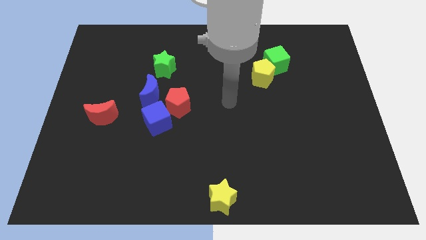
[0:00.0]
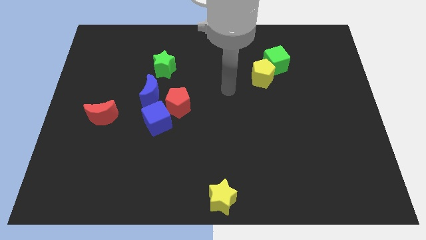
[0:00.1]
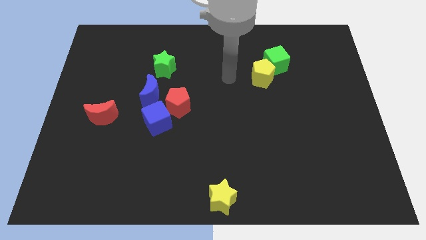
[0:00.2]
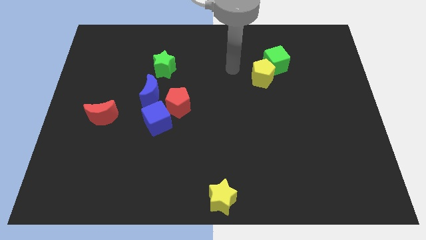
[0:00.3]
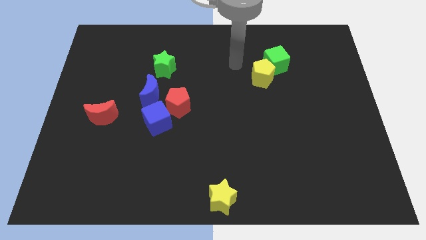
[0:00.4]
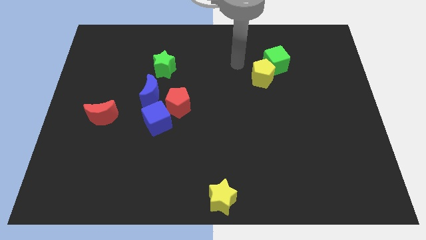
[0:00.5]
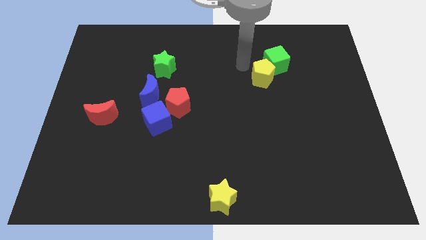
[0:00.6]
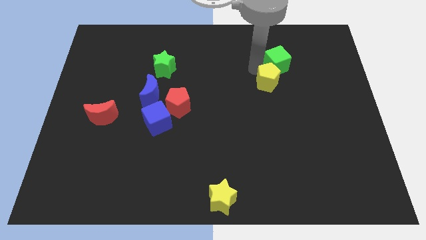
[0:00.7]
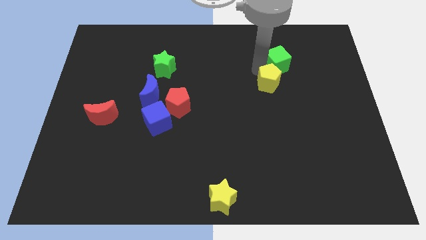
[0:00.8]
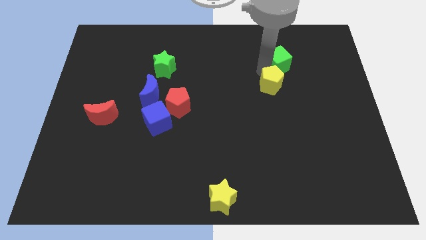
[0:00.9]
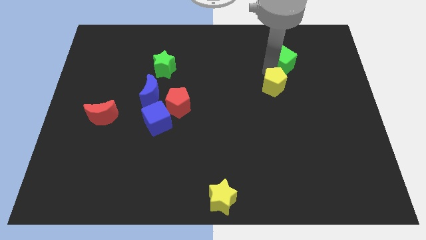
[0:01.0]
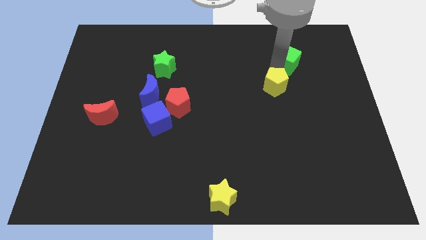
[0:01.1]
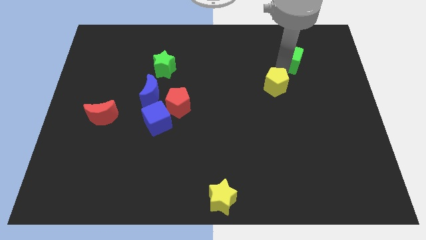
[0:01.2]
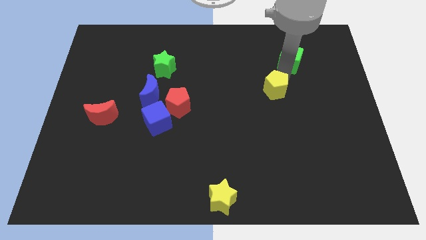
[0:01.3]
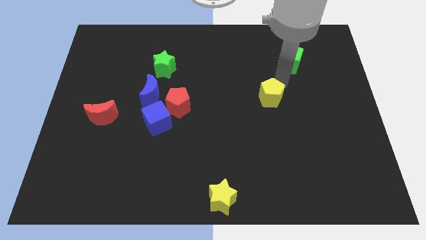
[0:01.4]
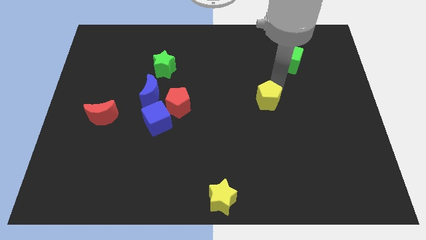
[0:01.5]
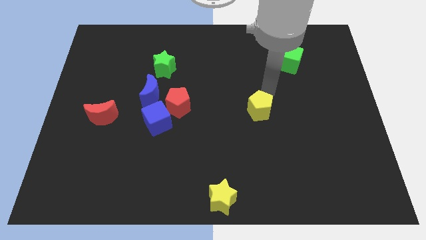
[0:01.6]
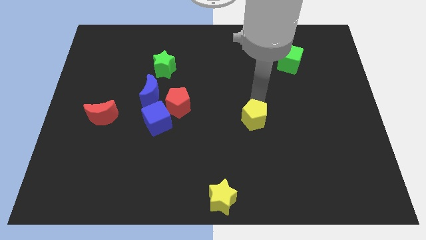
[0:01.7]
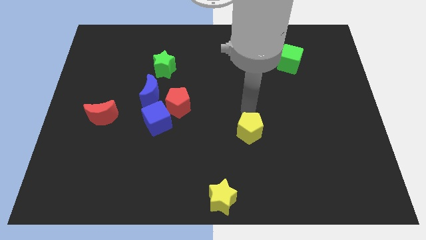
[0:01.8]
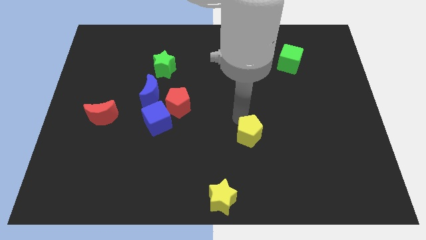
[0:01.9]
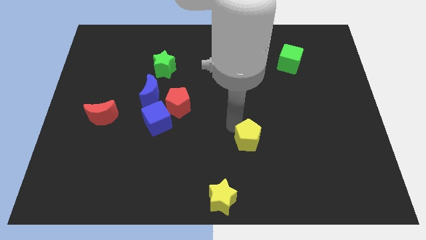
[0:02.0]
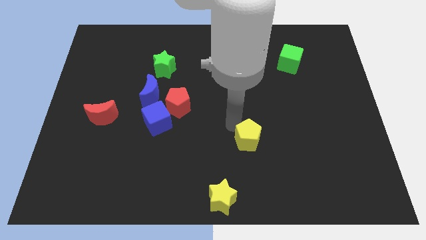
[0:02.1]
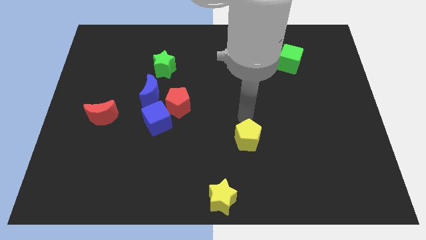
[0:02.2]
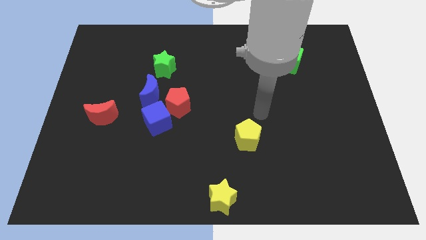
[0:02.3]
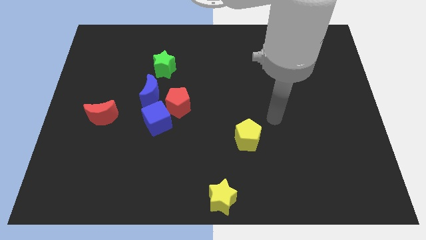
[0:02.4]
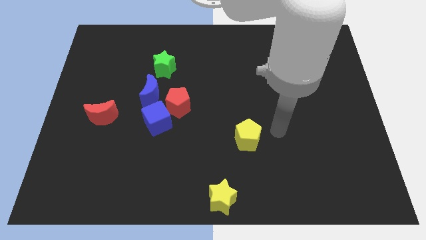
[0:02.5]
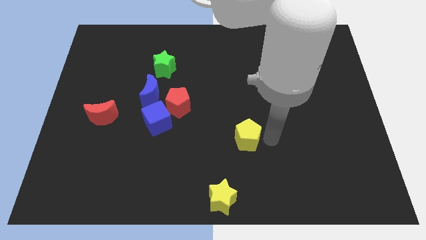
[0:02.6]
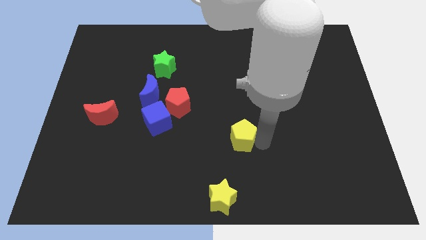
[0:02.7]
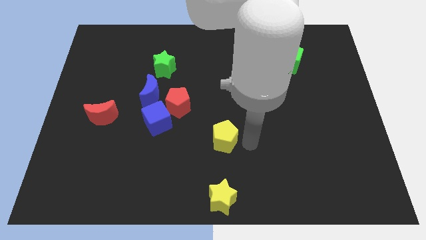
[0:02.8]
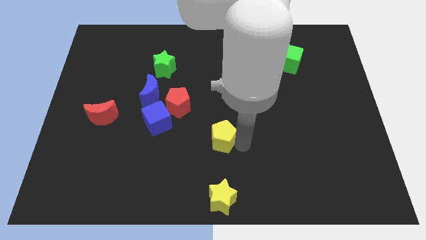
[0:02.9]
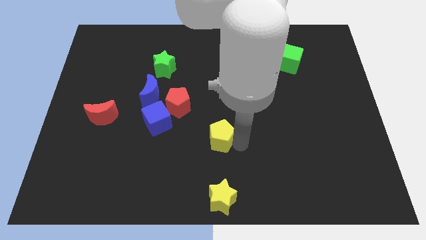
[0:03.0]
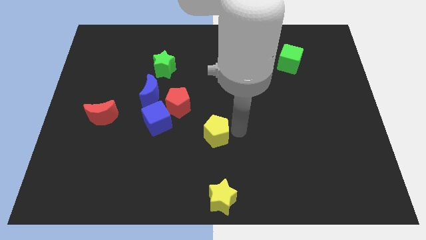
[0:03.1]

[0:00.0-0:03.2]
separate the yellow pentagon from the green cube

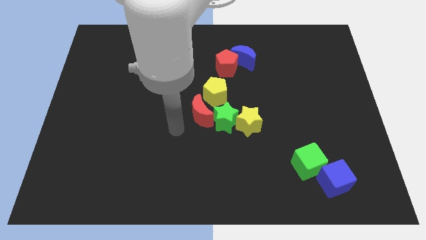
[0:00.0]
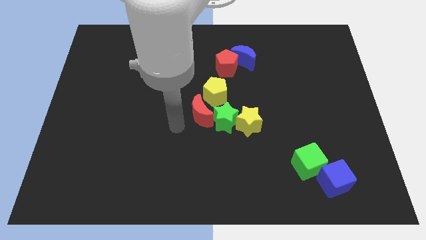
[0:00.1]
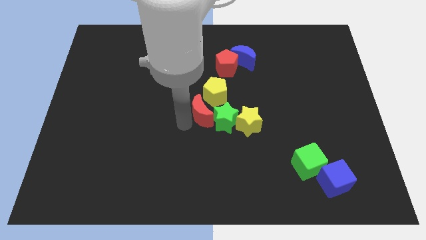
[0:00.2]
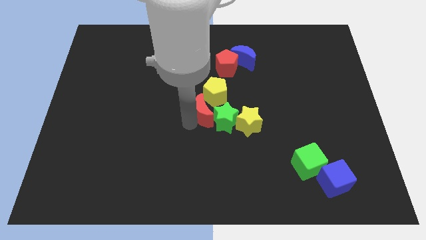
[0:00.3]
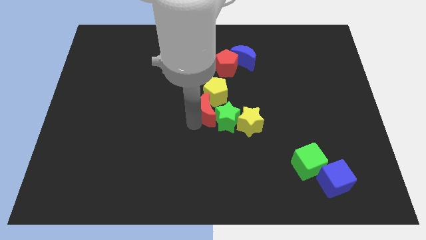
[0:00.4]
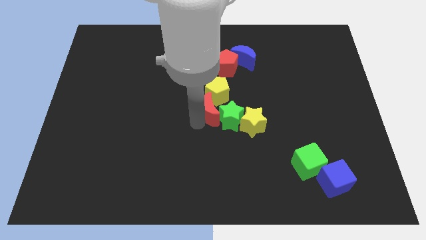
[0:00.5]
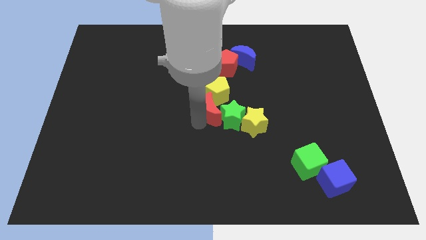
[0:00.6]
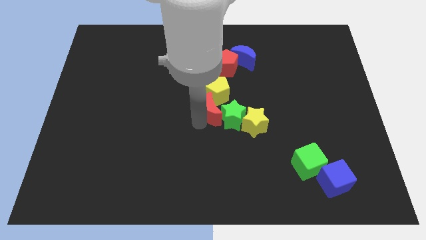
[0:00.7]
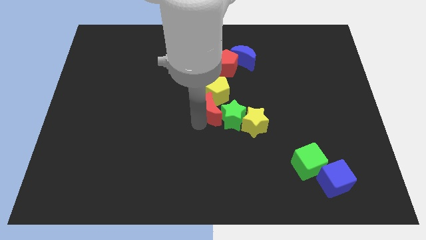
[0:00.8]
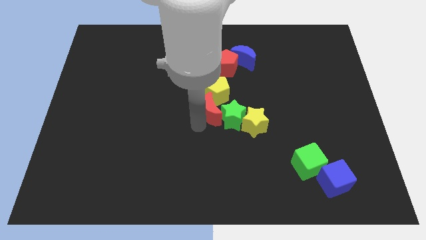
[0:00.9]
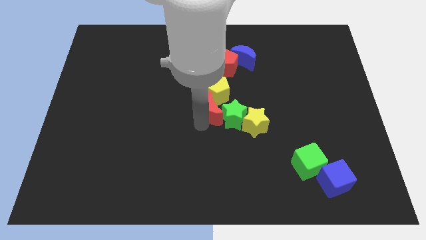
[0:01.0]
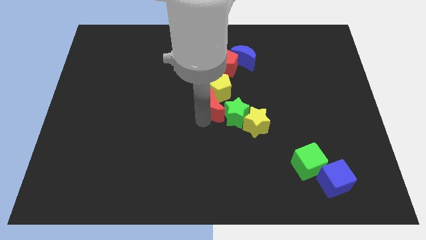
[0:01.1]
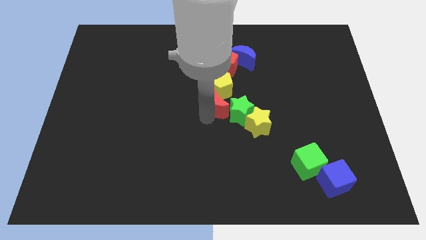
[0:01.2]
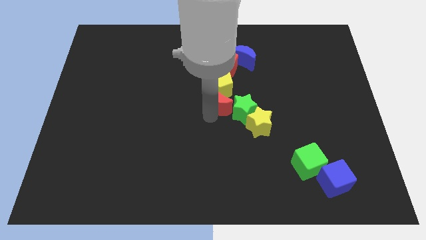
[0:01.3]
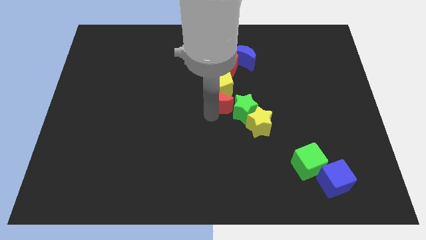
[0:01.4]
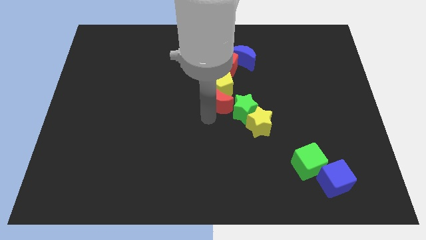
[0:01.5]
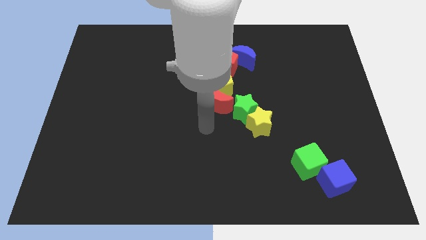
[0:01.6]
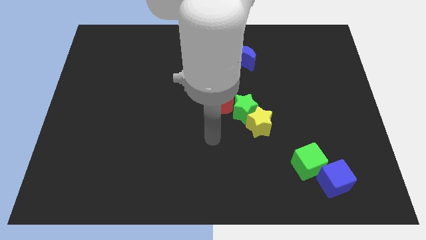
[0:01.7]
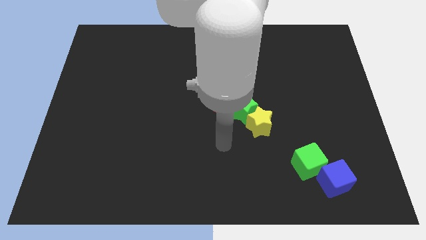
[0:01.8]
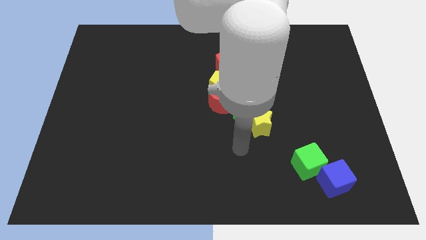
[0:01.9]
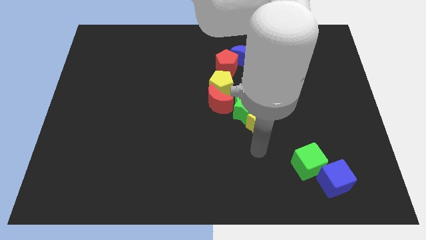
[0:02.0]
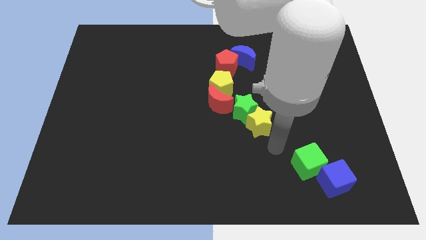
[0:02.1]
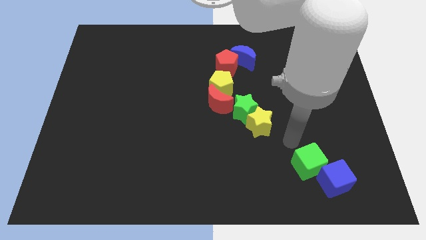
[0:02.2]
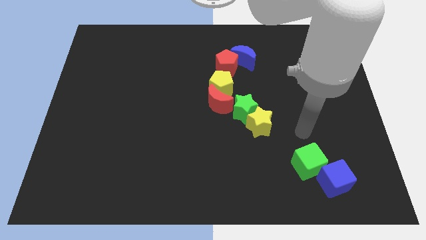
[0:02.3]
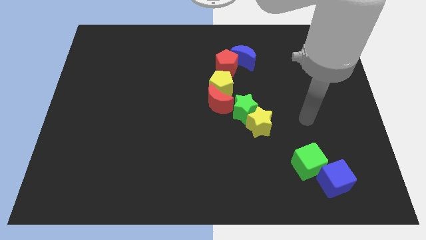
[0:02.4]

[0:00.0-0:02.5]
push the group of blocks towards the right side of the board

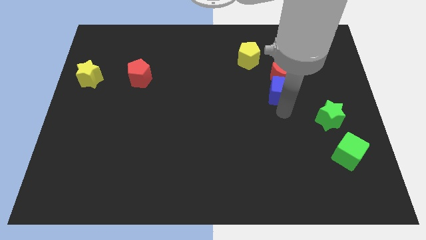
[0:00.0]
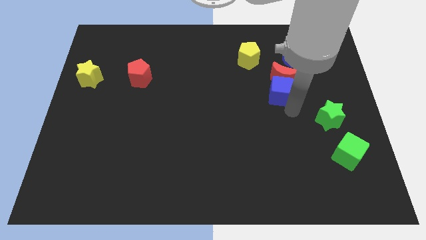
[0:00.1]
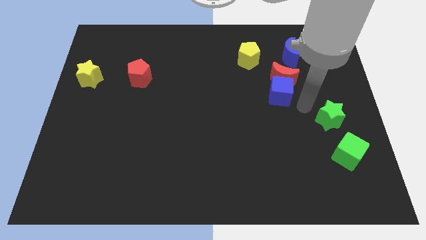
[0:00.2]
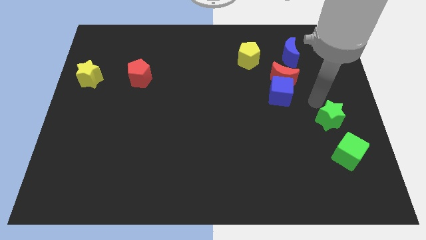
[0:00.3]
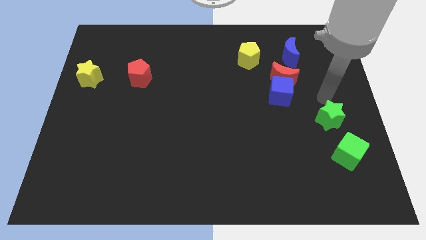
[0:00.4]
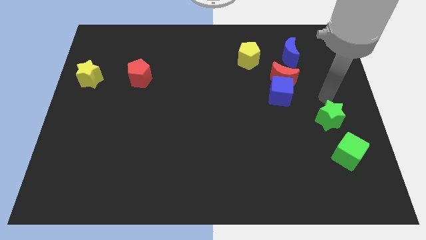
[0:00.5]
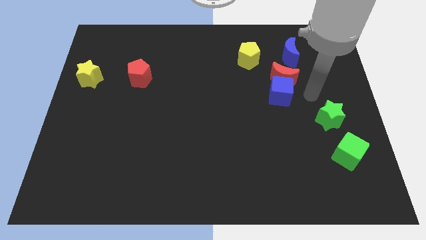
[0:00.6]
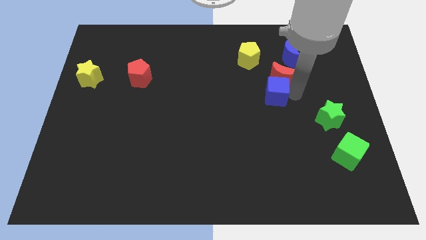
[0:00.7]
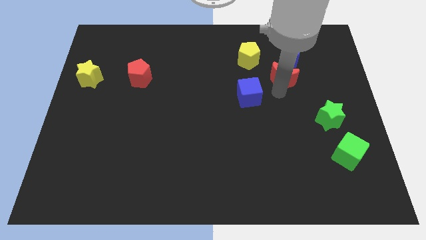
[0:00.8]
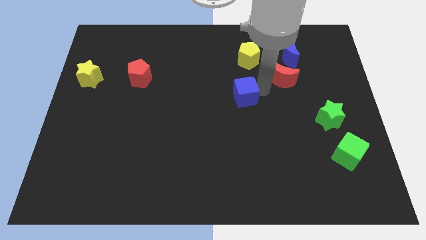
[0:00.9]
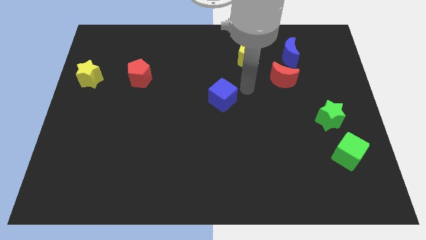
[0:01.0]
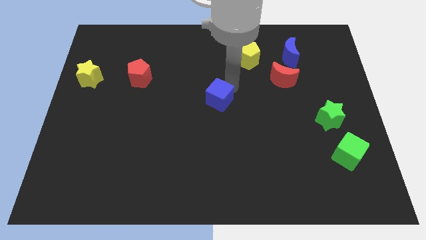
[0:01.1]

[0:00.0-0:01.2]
move the blue cube away from the red crescent

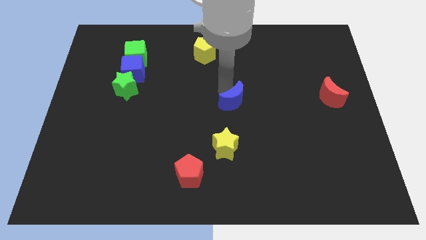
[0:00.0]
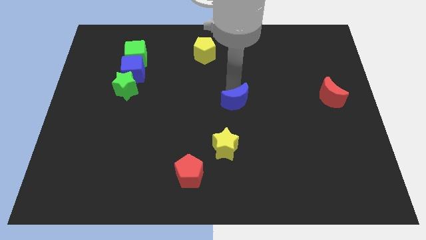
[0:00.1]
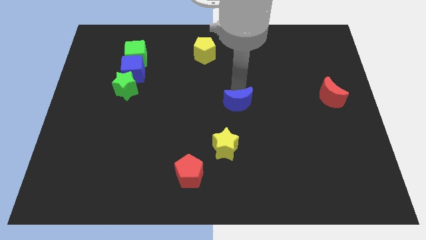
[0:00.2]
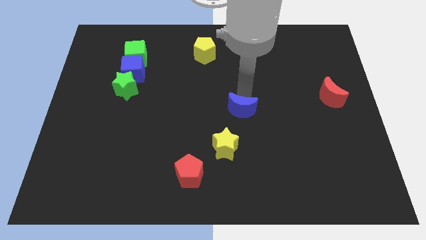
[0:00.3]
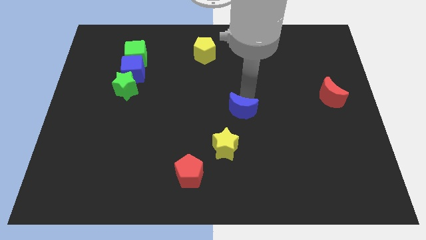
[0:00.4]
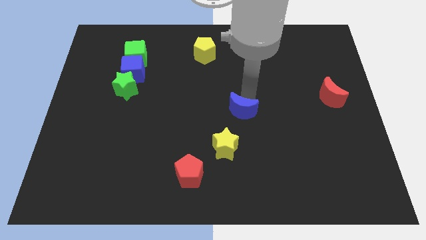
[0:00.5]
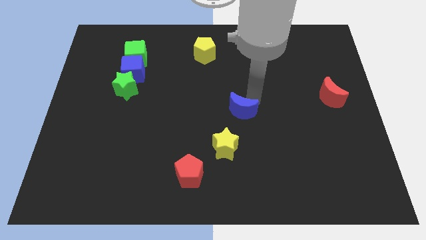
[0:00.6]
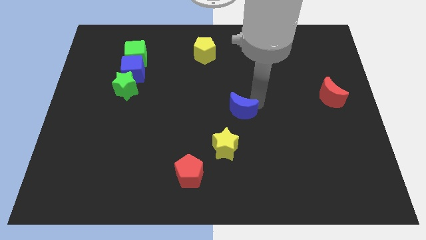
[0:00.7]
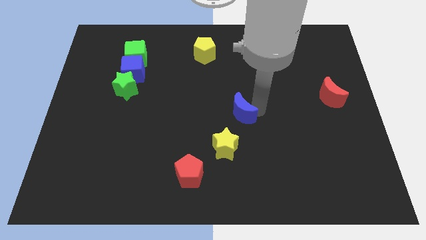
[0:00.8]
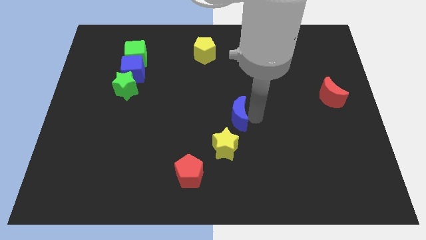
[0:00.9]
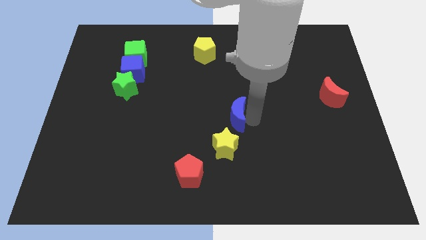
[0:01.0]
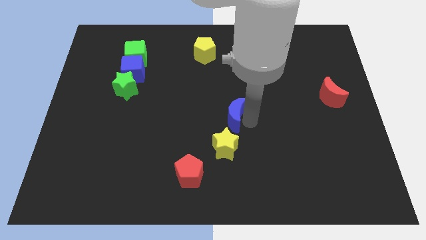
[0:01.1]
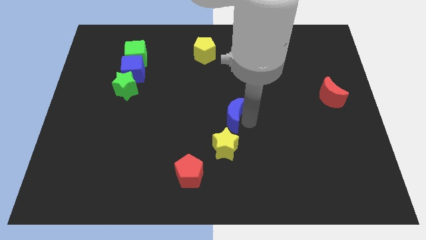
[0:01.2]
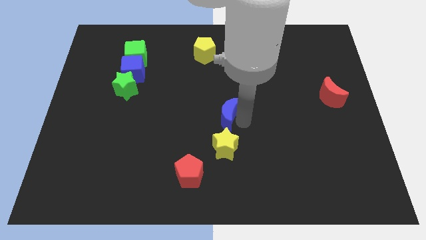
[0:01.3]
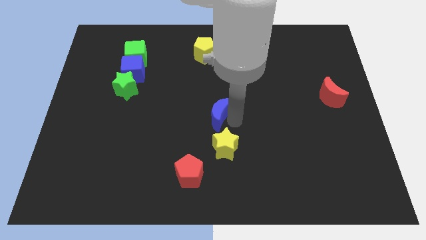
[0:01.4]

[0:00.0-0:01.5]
place the blue crescent above the yellow star

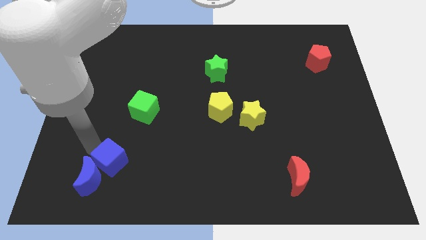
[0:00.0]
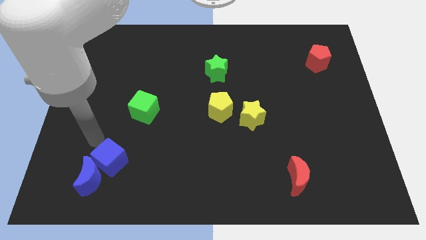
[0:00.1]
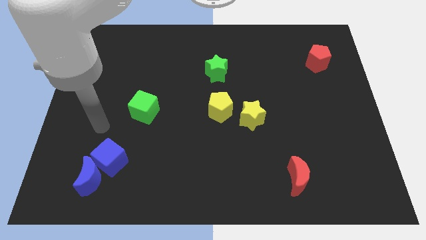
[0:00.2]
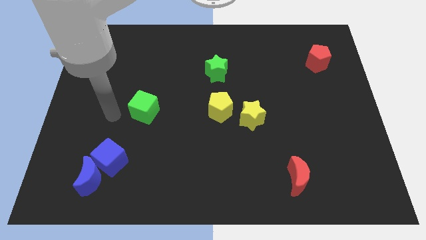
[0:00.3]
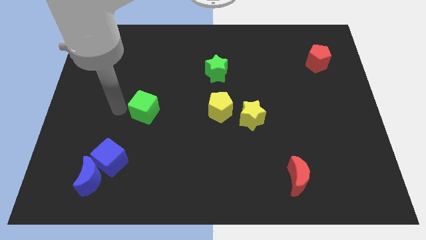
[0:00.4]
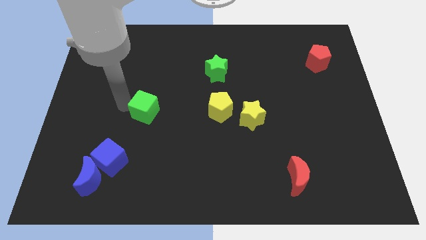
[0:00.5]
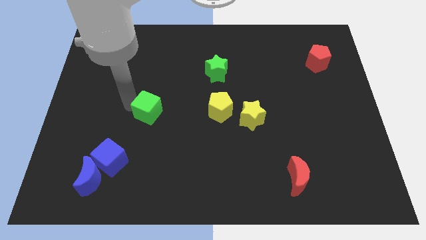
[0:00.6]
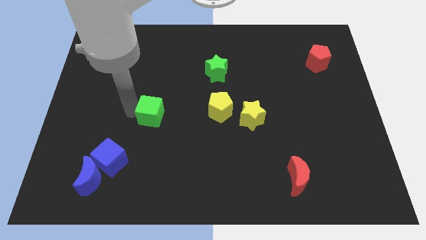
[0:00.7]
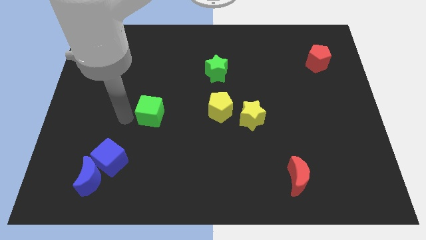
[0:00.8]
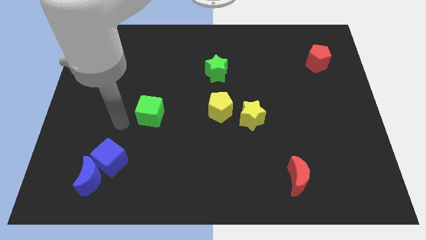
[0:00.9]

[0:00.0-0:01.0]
slightly push the green cube towards the right side
